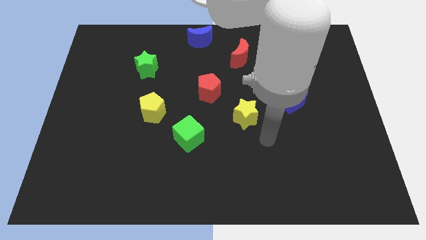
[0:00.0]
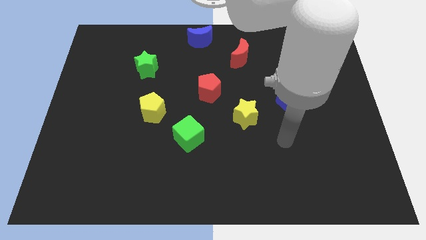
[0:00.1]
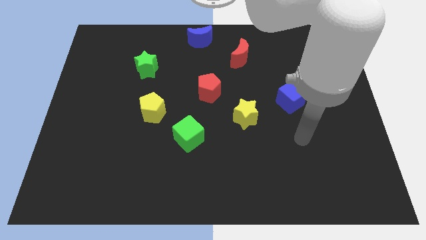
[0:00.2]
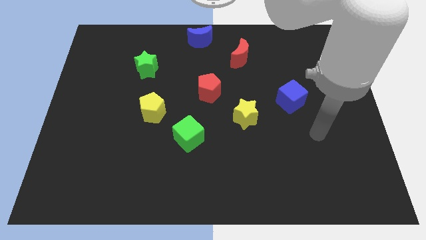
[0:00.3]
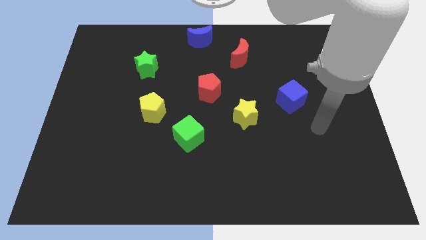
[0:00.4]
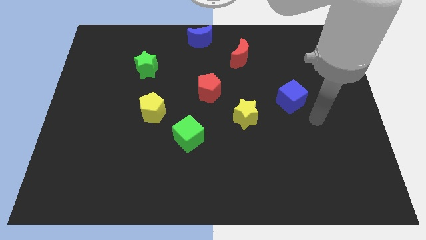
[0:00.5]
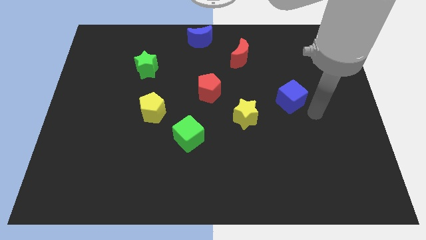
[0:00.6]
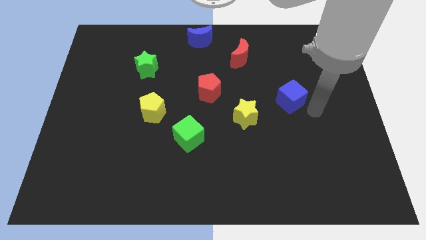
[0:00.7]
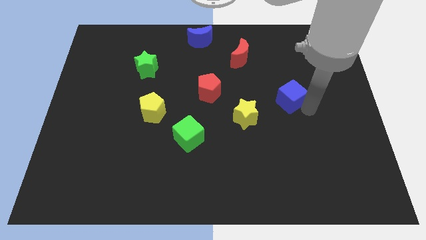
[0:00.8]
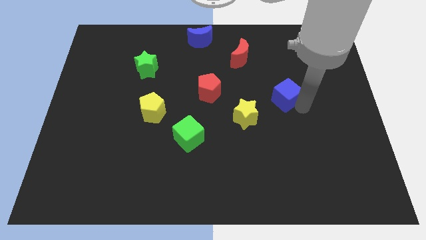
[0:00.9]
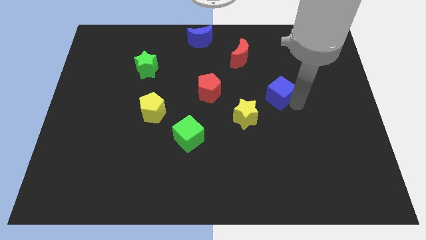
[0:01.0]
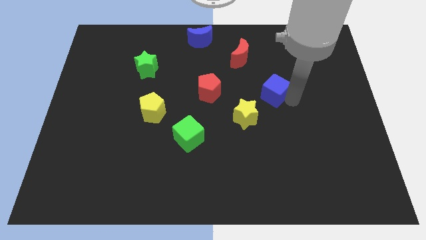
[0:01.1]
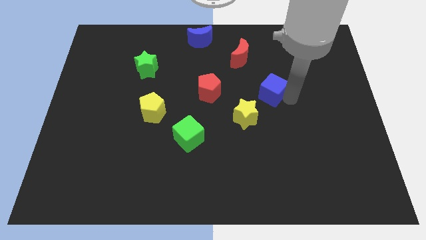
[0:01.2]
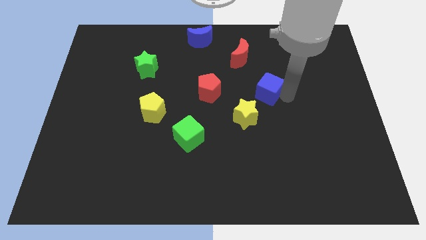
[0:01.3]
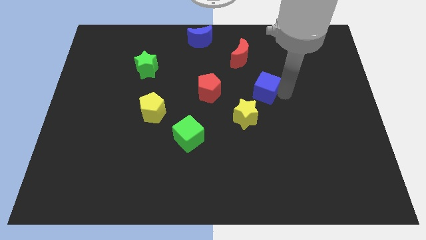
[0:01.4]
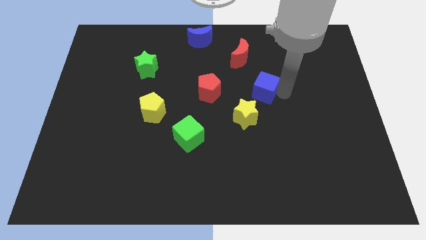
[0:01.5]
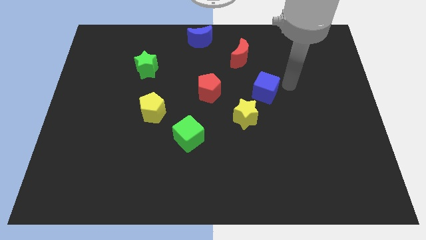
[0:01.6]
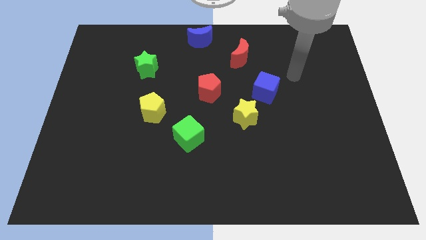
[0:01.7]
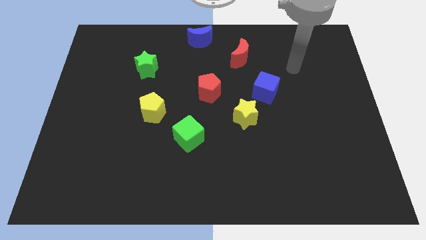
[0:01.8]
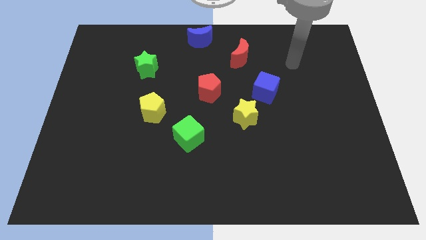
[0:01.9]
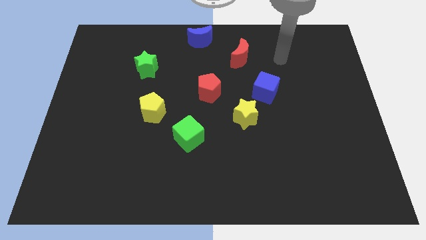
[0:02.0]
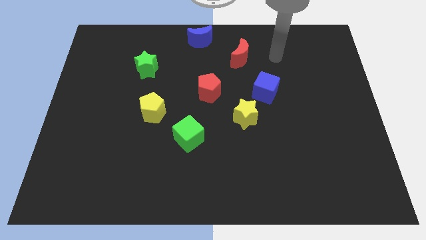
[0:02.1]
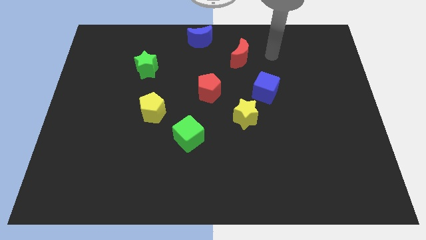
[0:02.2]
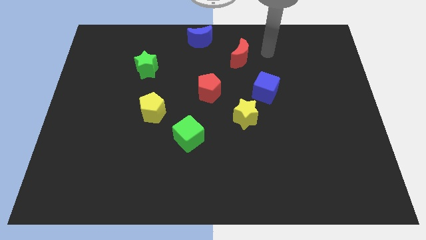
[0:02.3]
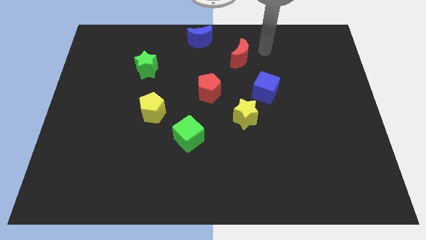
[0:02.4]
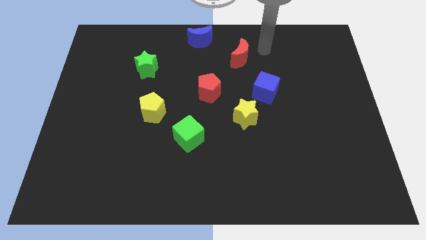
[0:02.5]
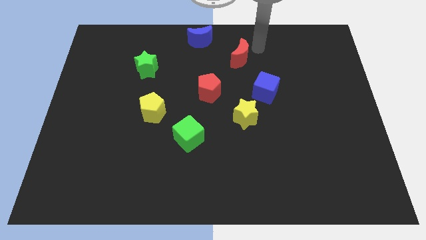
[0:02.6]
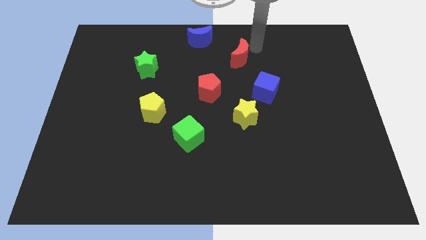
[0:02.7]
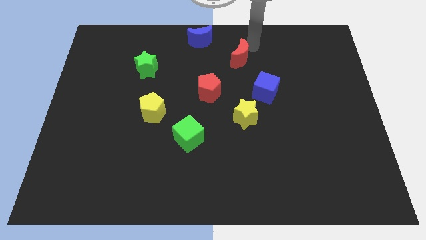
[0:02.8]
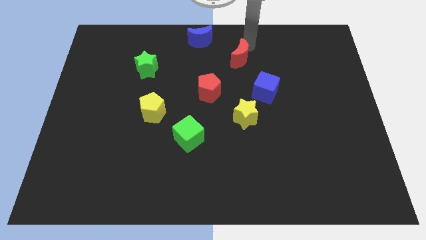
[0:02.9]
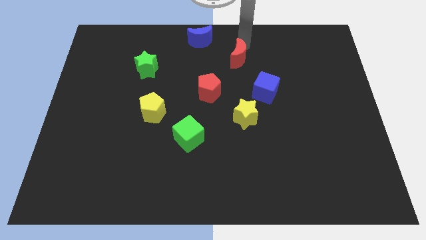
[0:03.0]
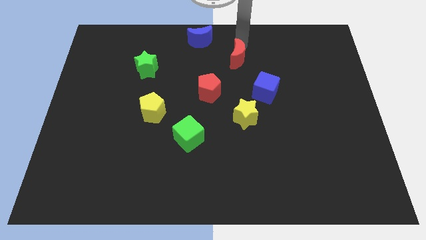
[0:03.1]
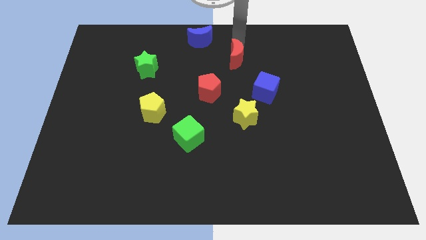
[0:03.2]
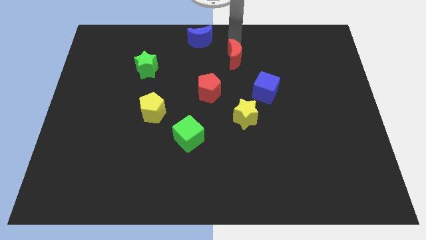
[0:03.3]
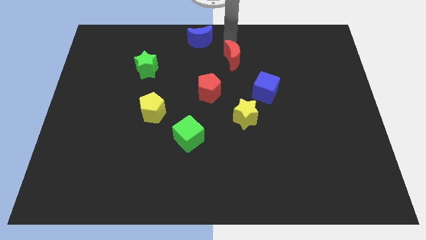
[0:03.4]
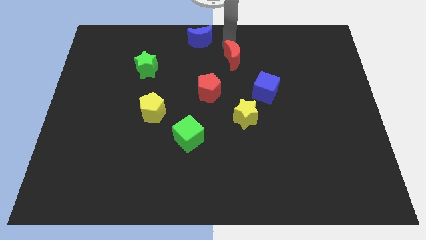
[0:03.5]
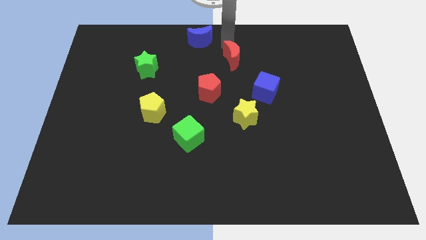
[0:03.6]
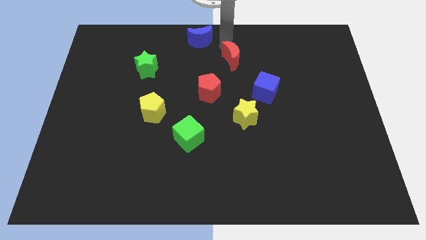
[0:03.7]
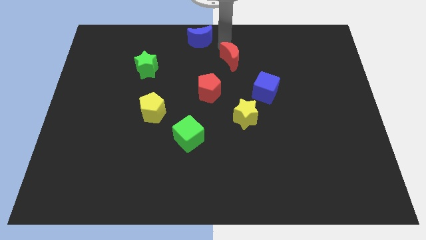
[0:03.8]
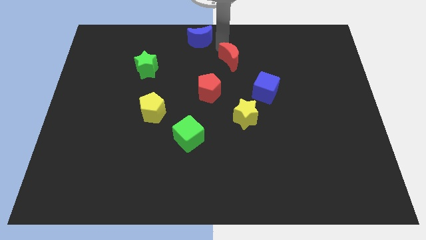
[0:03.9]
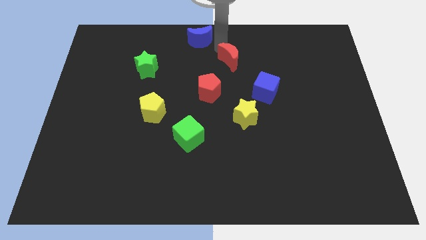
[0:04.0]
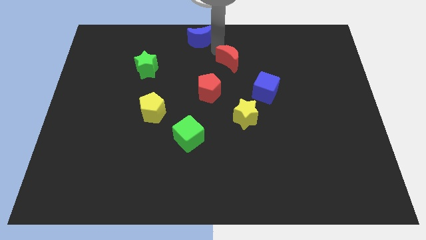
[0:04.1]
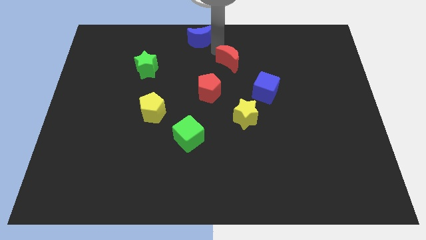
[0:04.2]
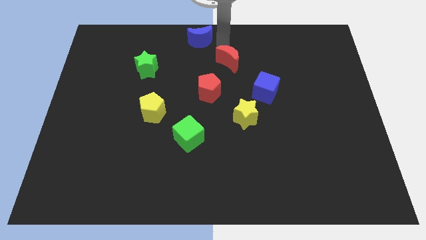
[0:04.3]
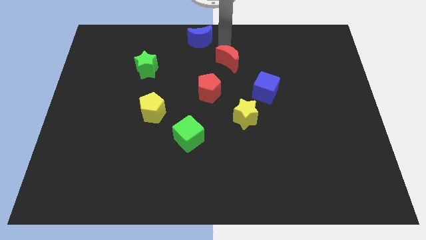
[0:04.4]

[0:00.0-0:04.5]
drag the red crescent diagonally in between the blue crescent and blue cube

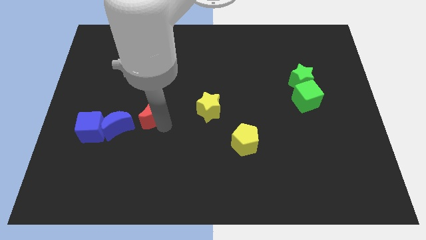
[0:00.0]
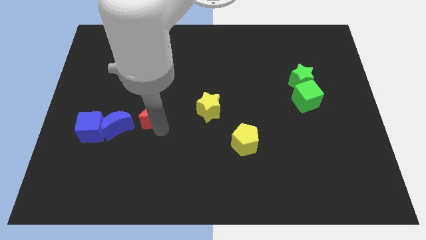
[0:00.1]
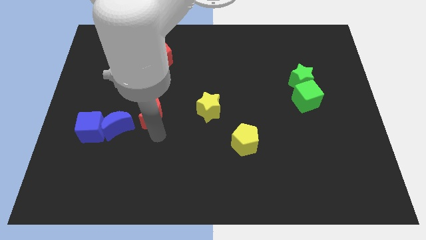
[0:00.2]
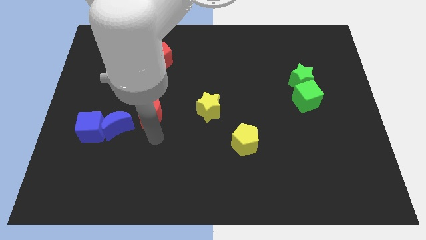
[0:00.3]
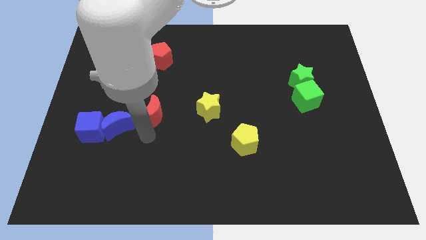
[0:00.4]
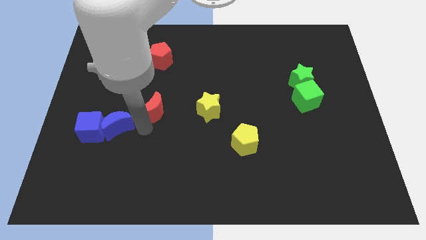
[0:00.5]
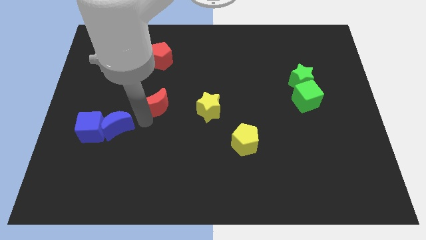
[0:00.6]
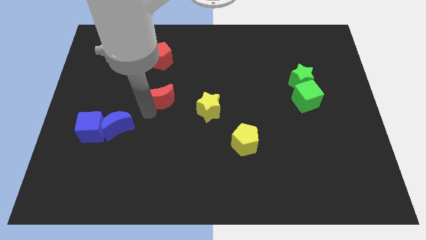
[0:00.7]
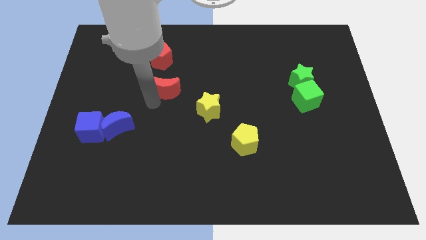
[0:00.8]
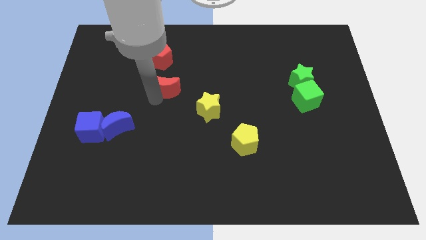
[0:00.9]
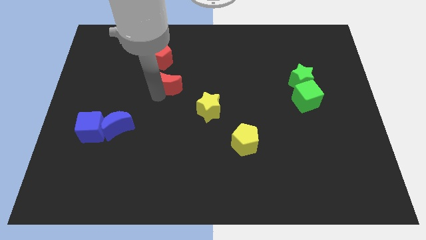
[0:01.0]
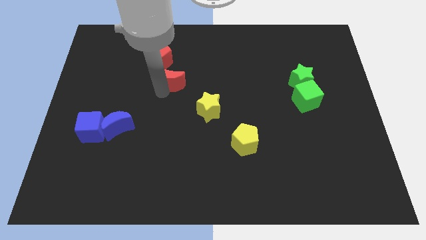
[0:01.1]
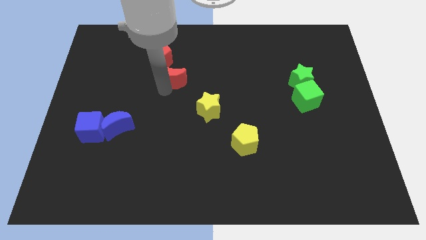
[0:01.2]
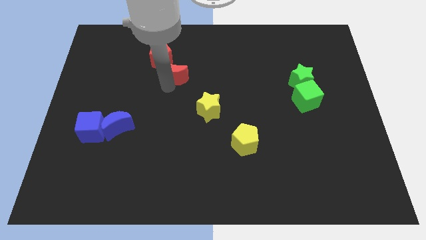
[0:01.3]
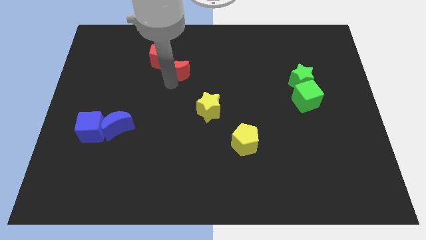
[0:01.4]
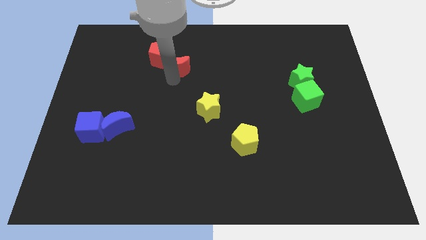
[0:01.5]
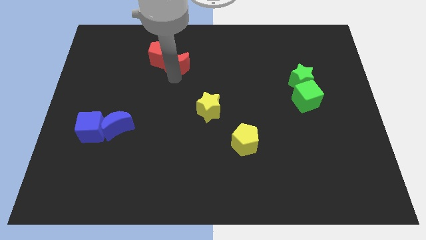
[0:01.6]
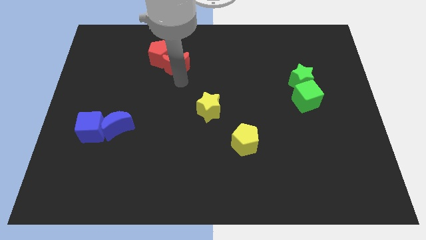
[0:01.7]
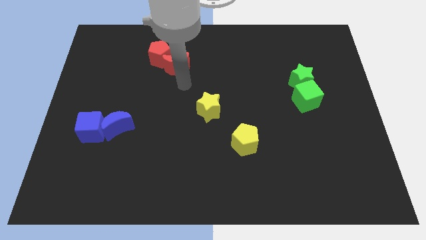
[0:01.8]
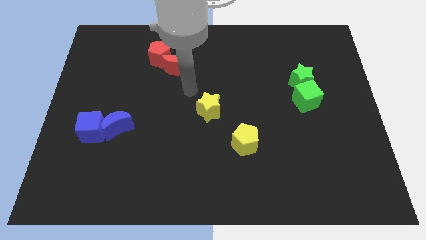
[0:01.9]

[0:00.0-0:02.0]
push the red moon into the red pentagon

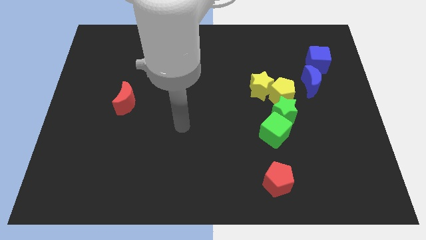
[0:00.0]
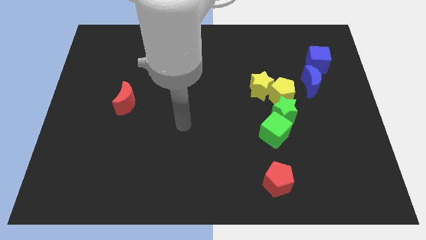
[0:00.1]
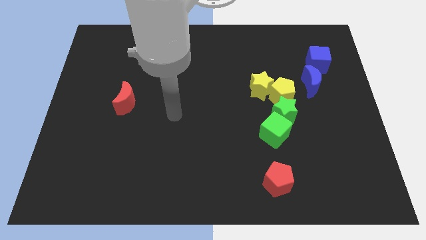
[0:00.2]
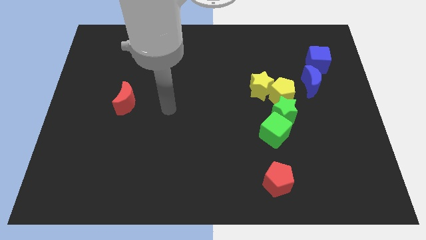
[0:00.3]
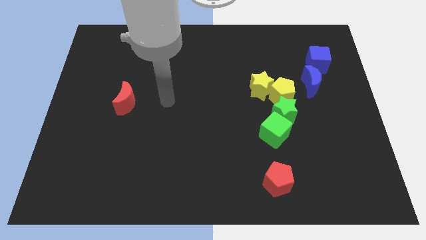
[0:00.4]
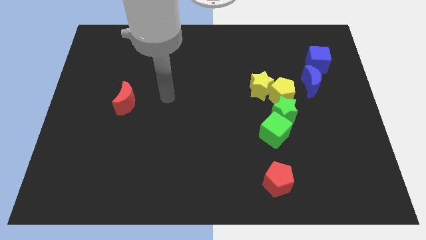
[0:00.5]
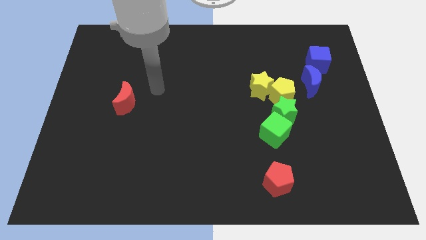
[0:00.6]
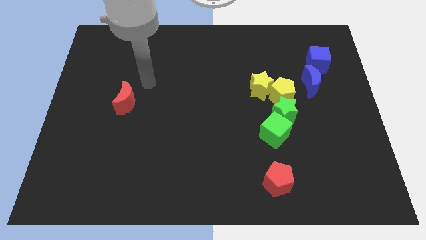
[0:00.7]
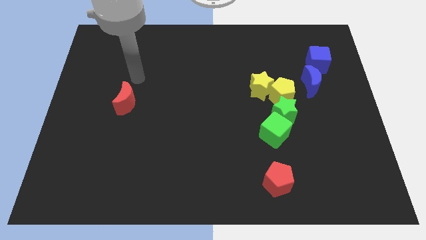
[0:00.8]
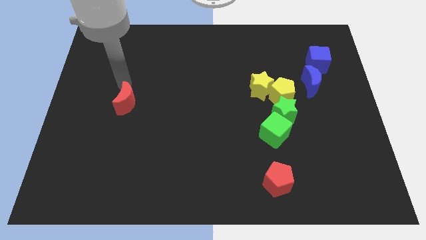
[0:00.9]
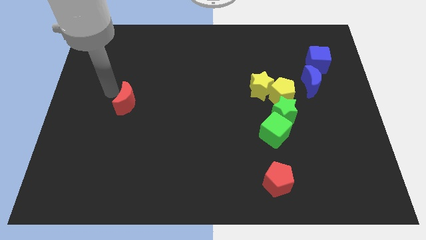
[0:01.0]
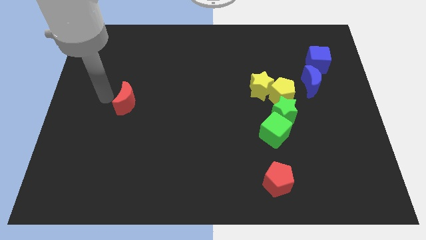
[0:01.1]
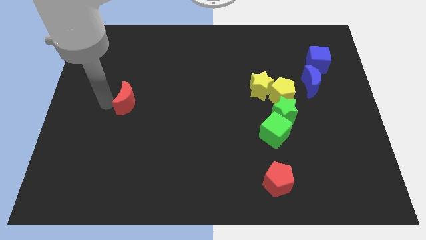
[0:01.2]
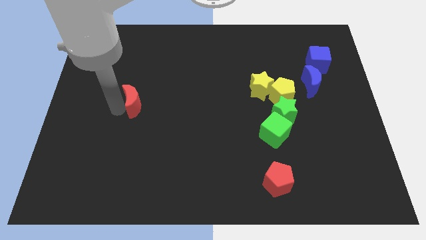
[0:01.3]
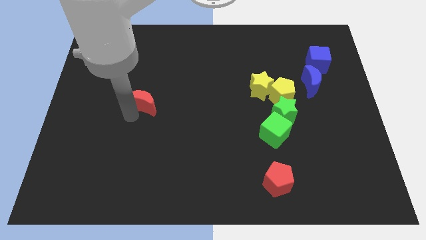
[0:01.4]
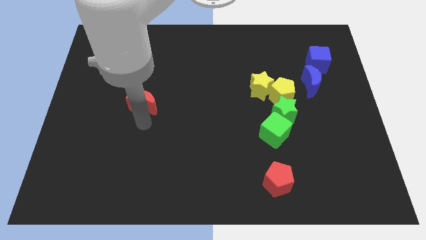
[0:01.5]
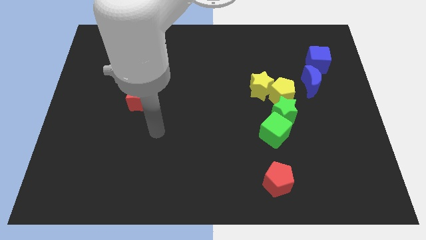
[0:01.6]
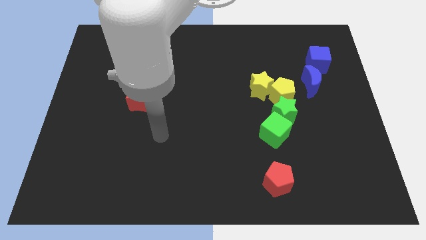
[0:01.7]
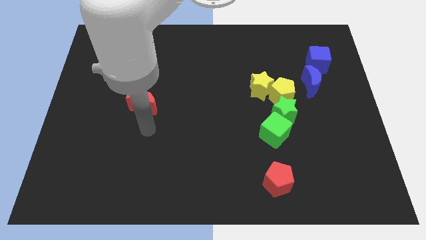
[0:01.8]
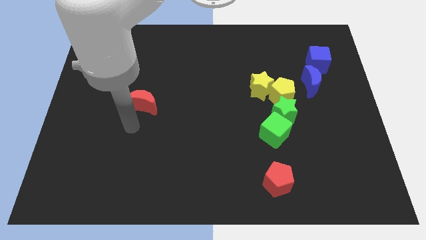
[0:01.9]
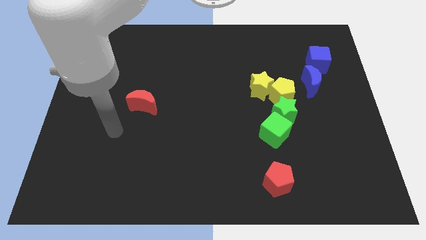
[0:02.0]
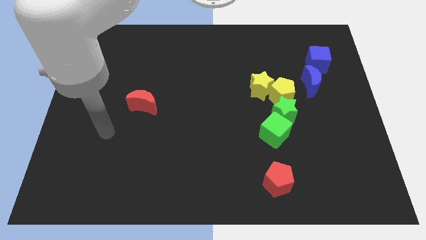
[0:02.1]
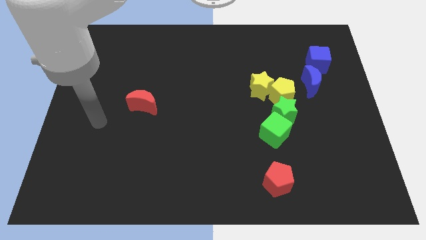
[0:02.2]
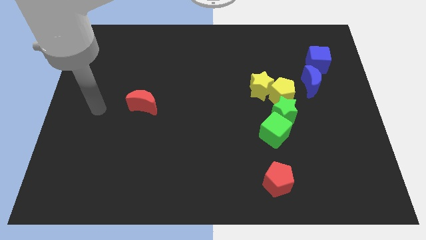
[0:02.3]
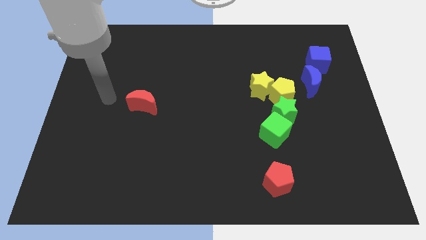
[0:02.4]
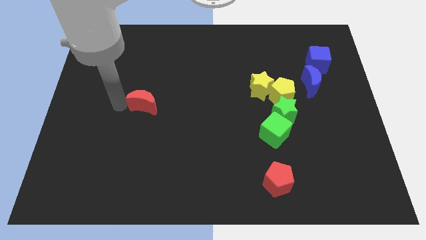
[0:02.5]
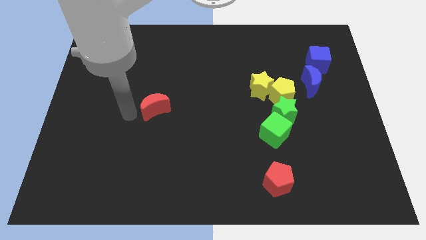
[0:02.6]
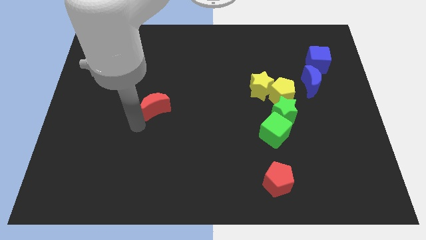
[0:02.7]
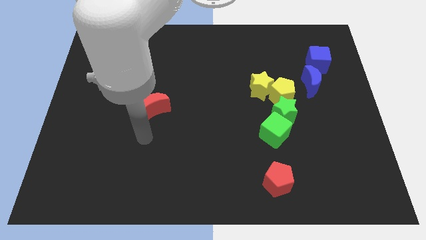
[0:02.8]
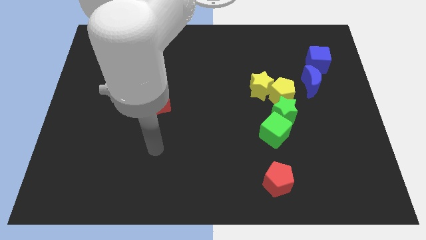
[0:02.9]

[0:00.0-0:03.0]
move the red crescent towards the center of the board
